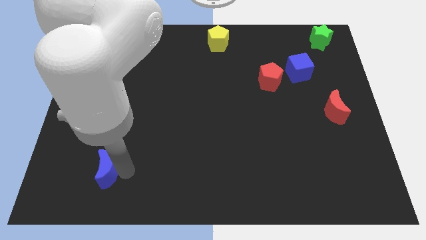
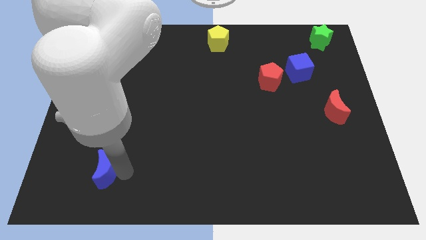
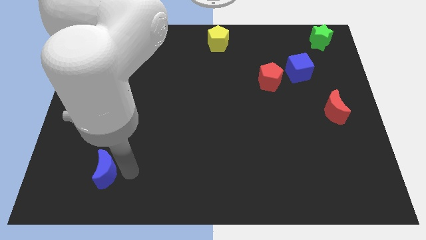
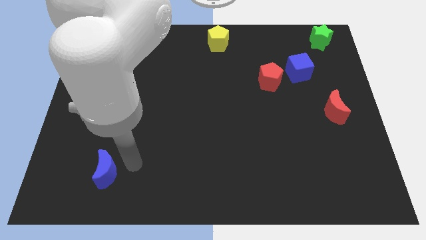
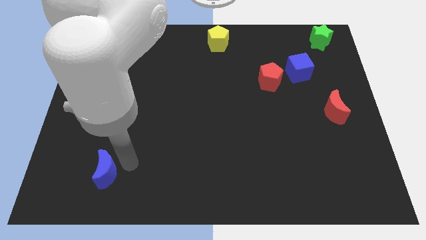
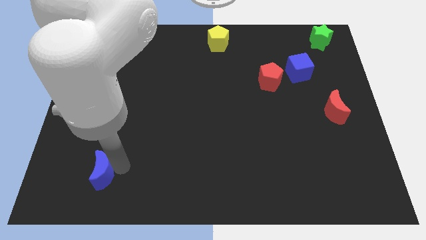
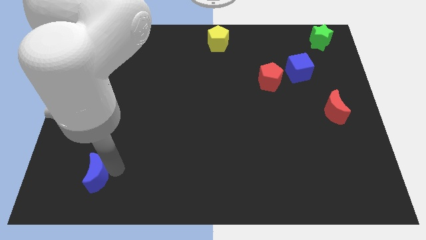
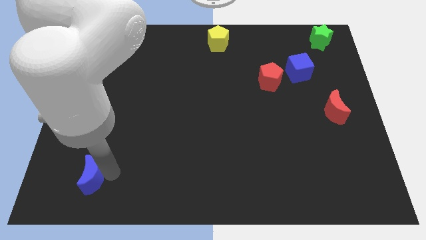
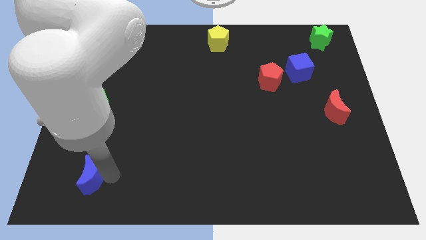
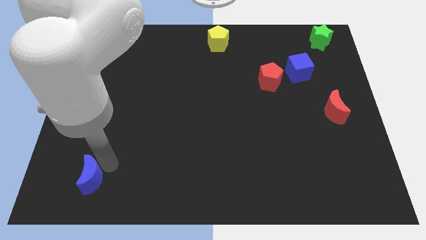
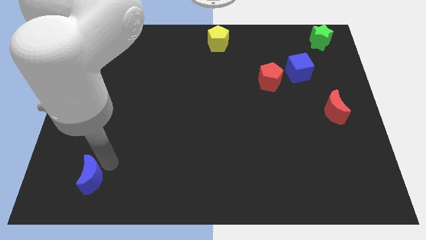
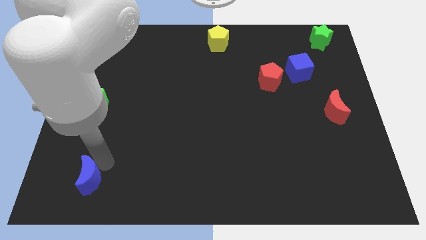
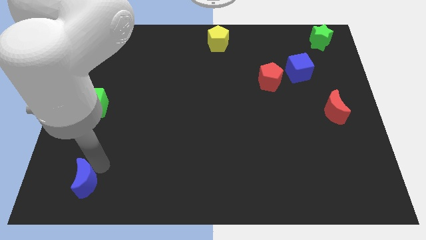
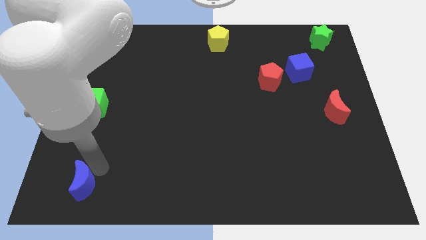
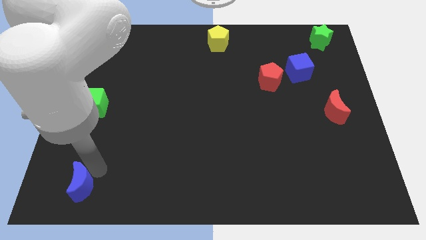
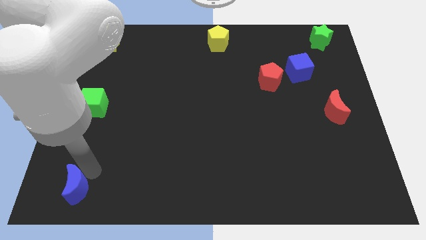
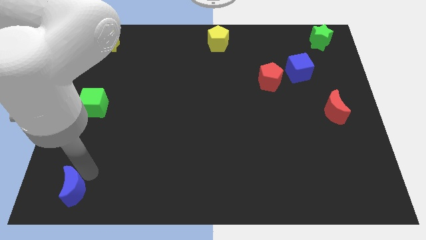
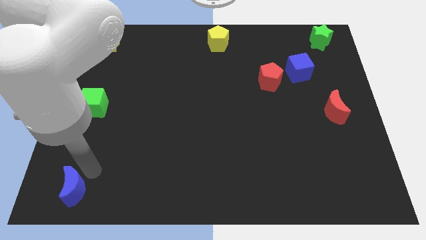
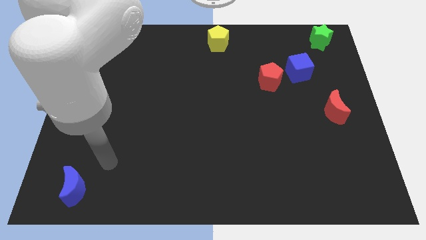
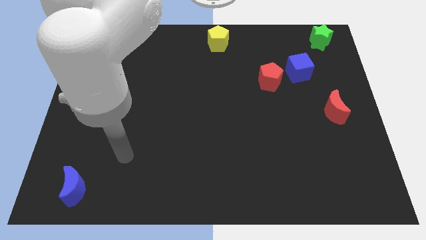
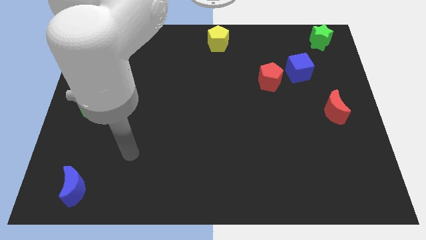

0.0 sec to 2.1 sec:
push the blue crescent slightly towards the bottom left corner

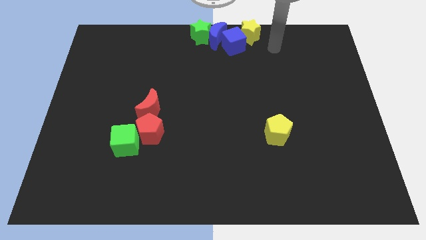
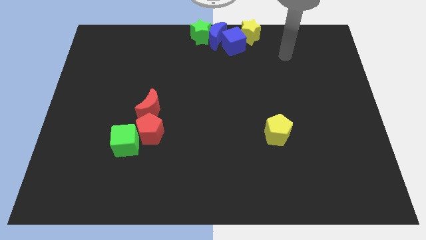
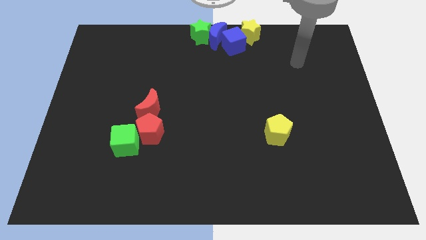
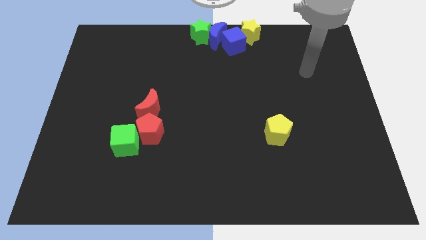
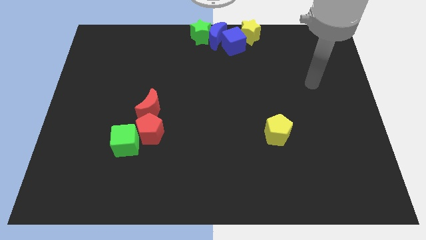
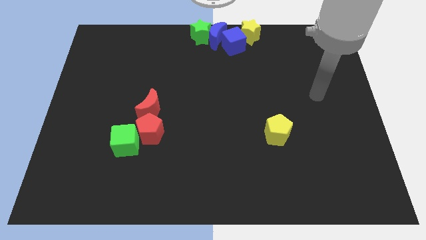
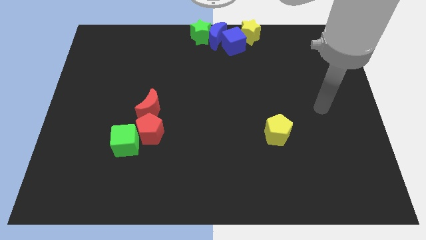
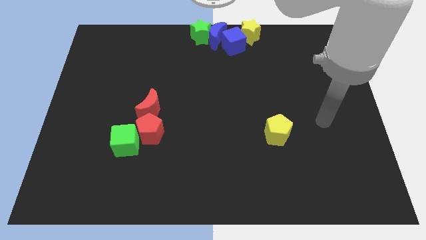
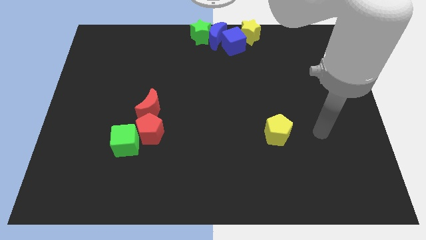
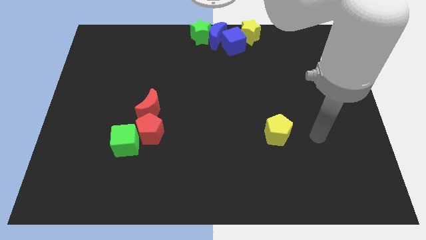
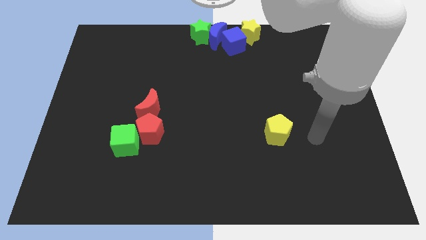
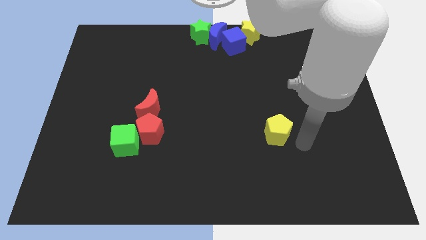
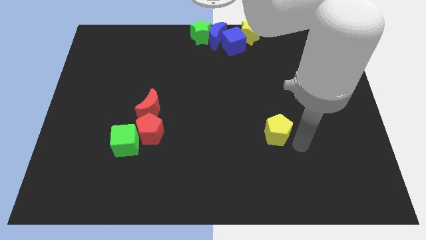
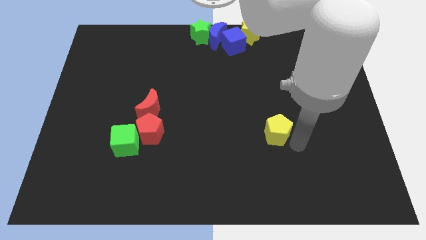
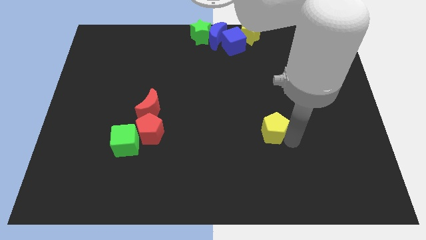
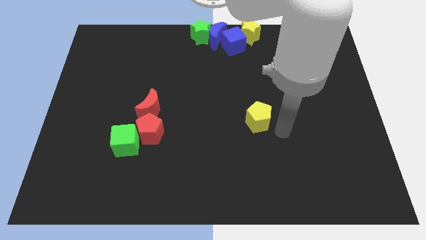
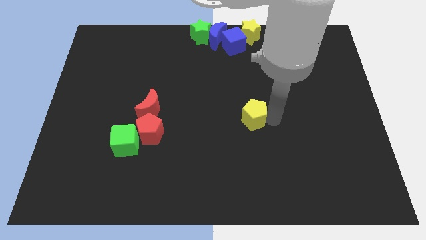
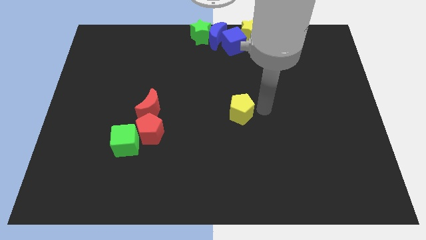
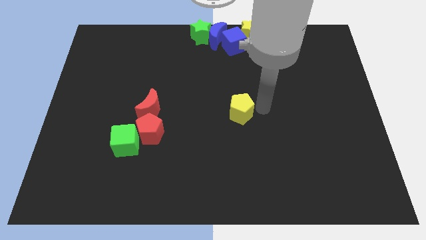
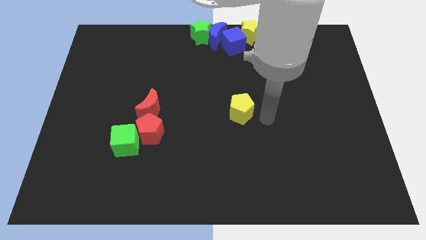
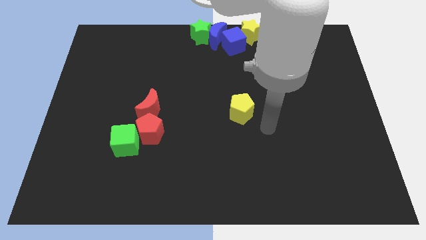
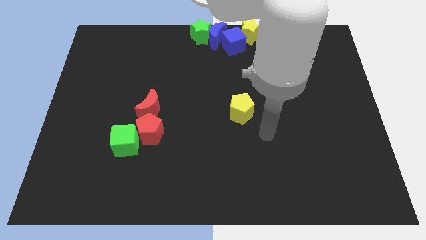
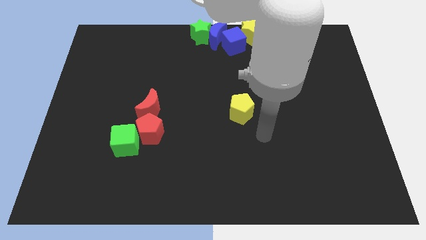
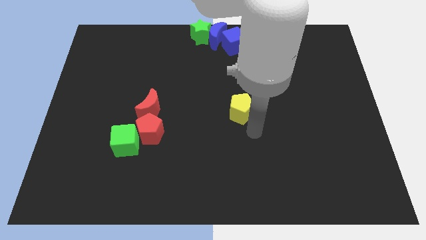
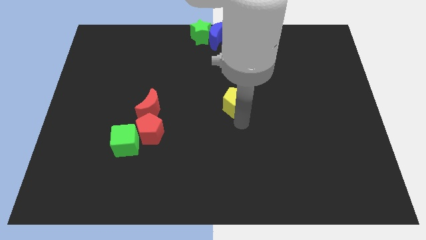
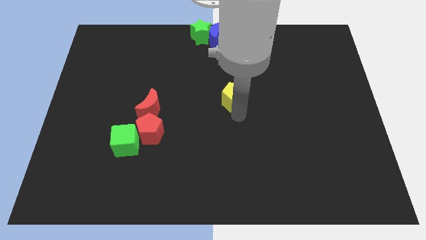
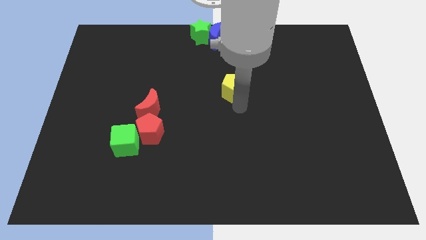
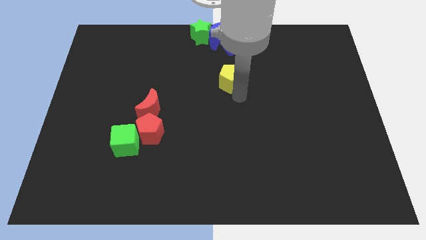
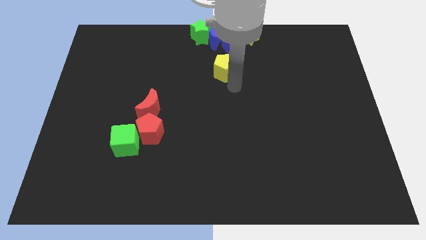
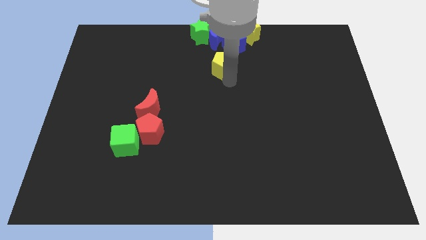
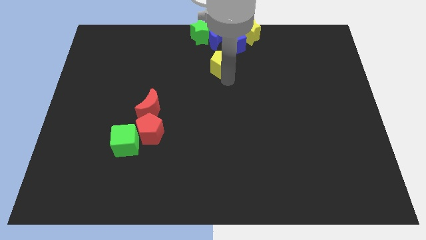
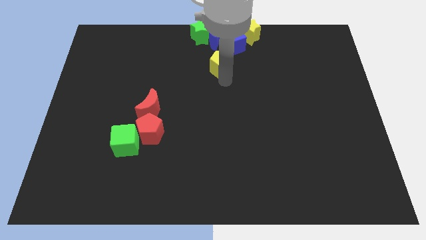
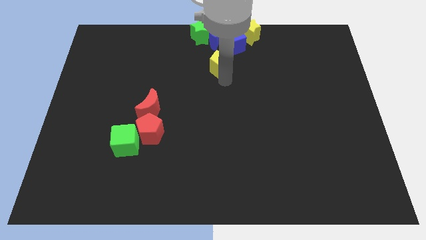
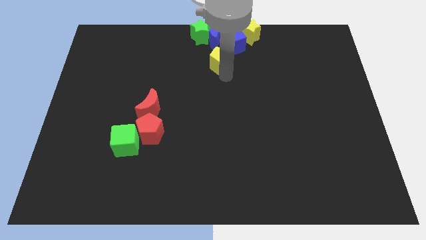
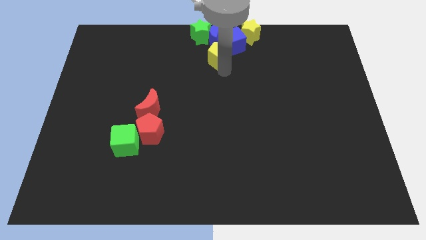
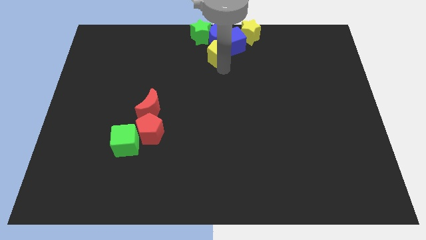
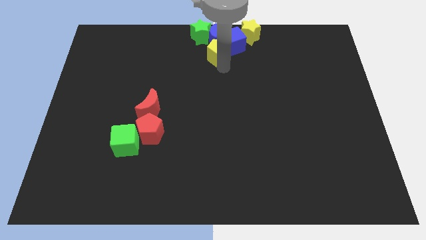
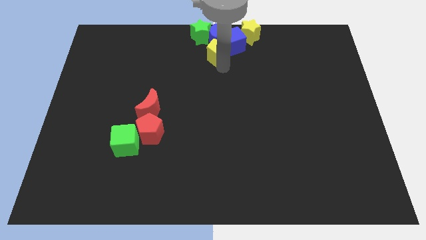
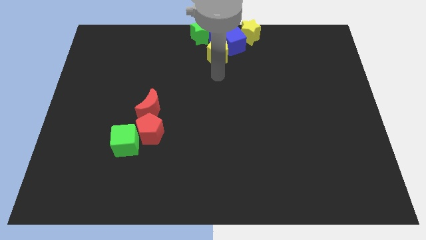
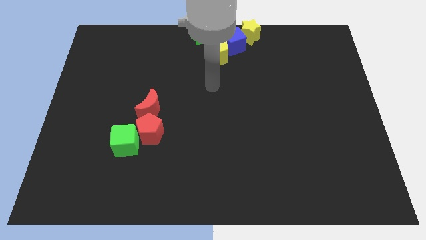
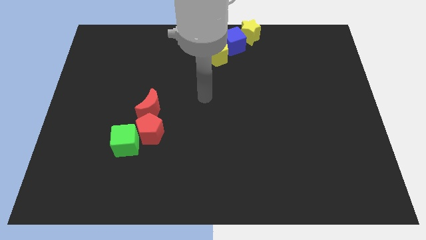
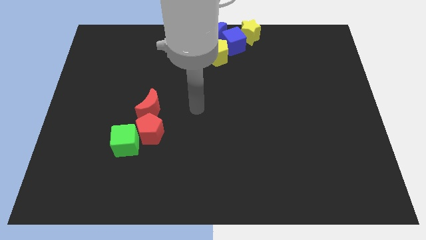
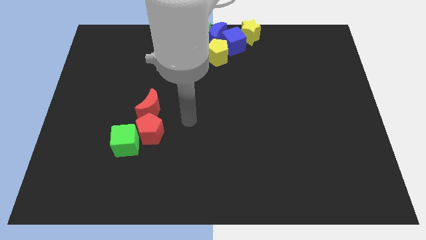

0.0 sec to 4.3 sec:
push the yellow pentagon to the left of the blue cube

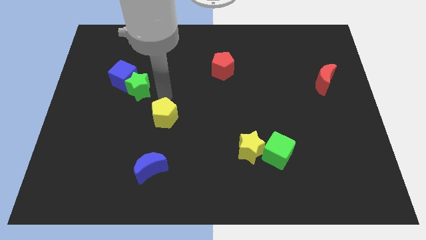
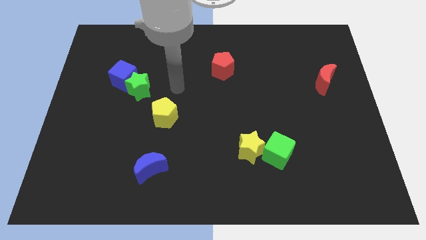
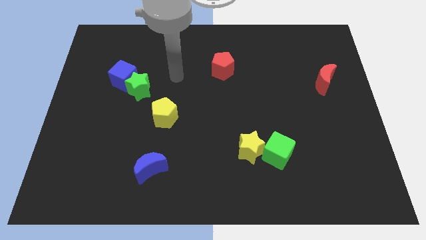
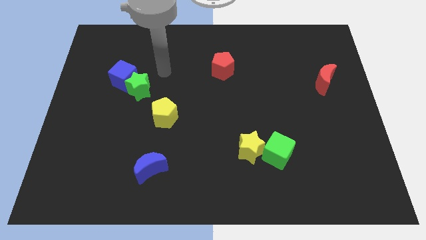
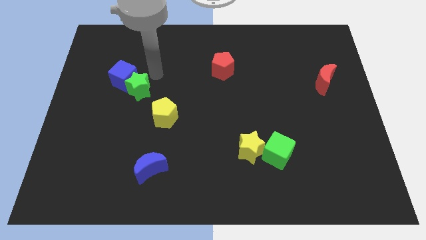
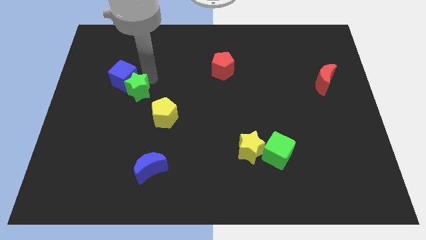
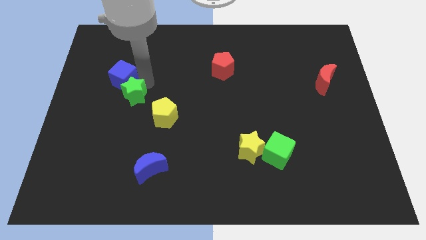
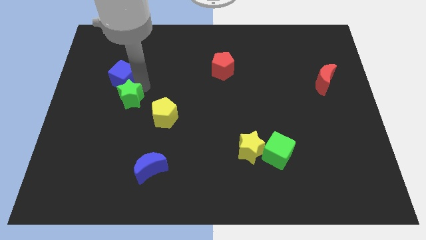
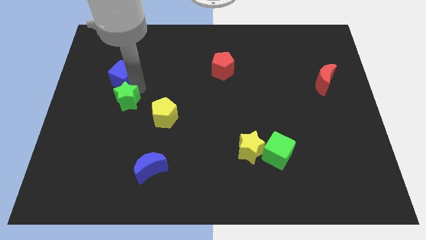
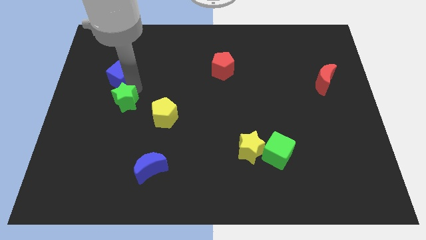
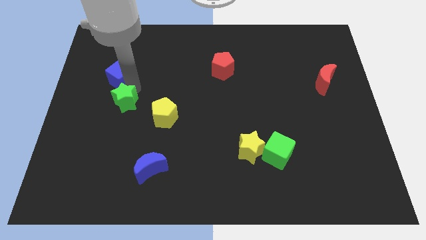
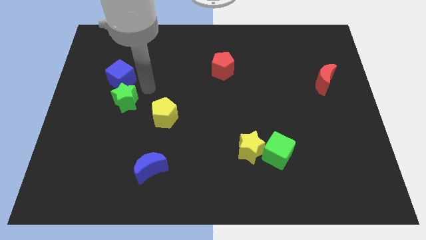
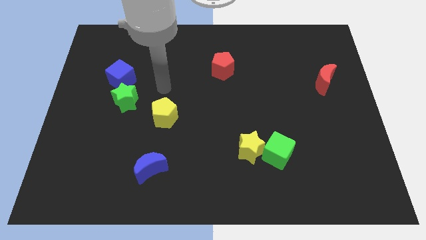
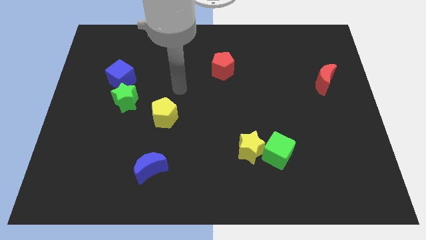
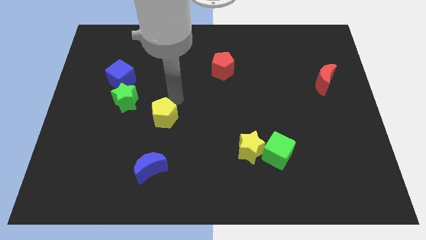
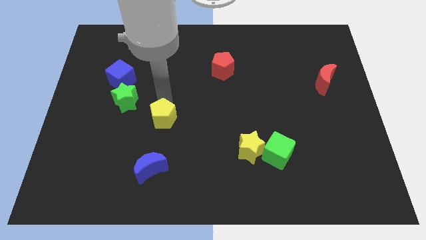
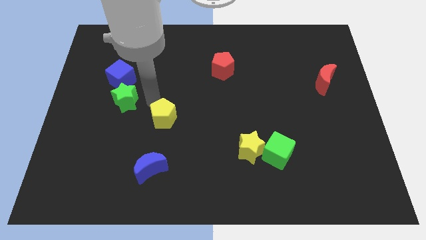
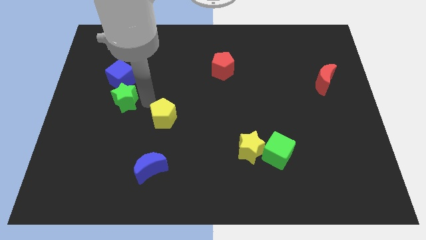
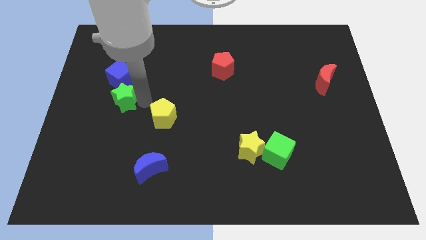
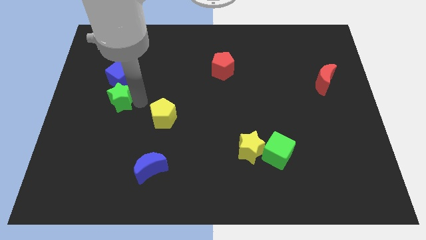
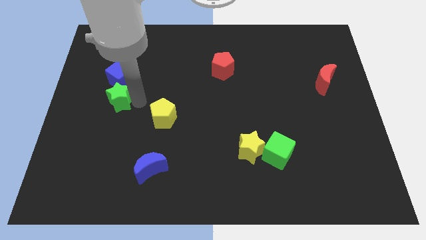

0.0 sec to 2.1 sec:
place the green star below the blue cube

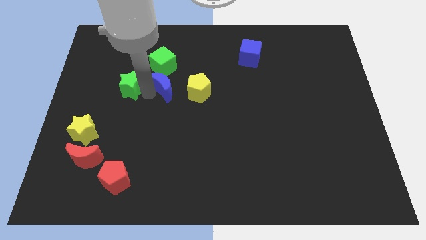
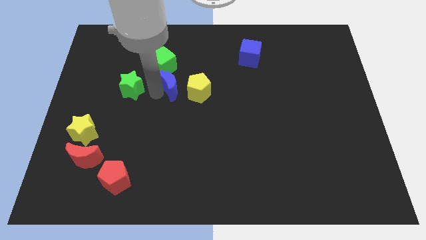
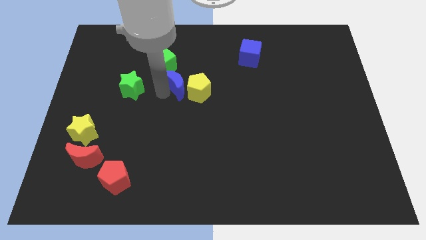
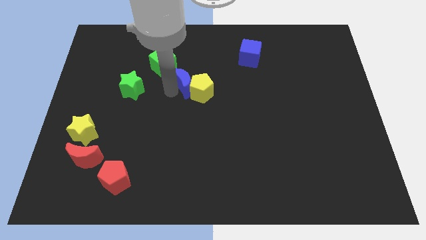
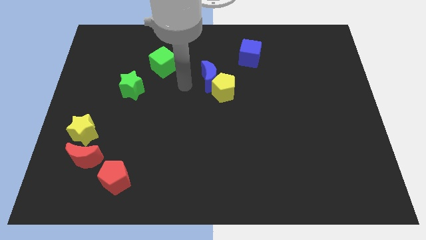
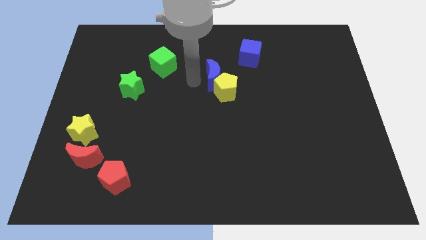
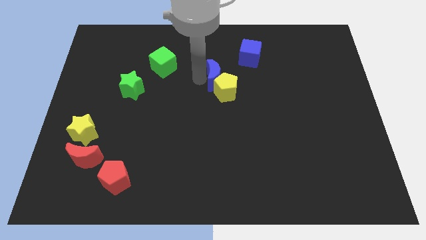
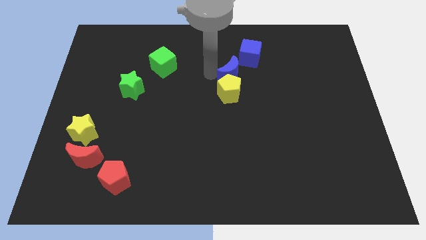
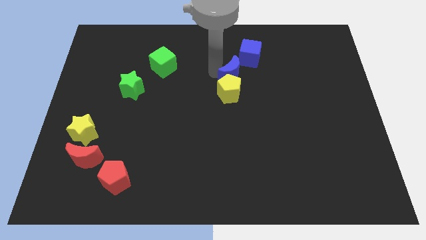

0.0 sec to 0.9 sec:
seperate green star and blue moon
